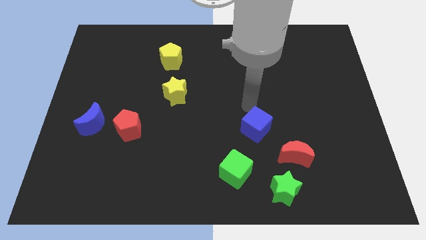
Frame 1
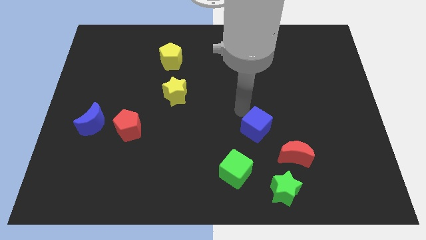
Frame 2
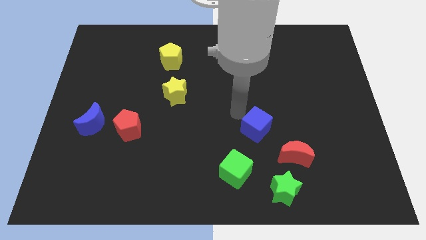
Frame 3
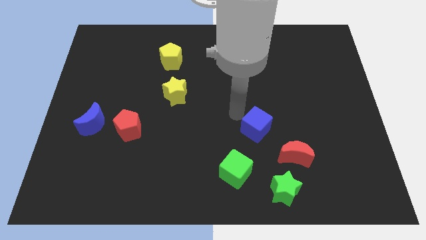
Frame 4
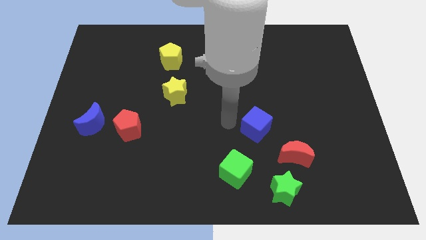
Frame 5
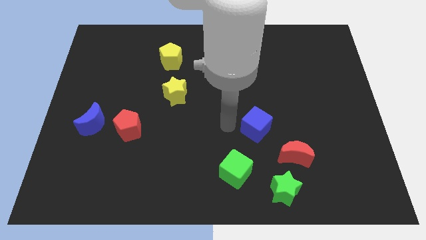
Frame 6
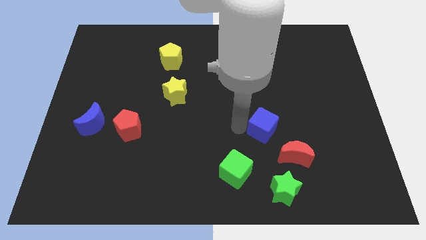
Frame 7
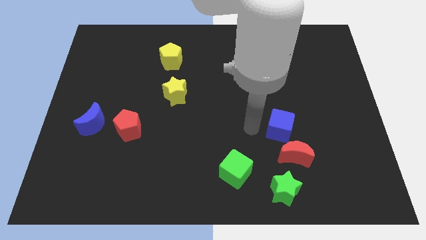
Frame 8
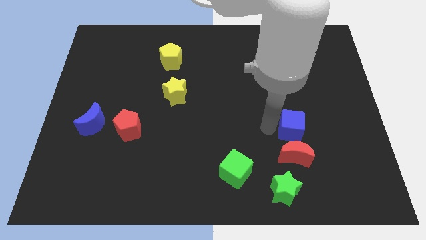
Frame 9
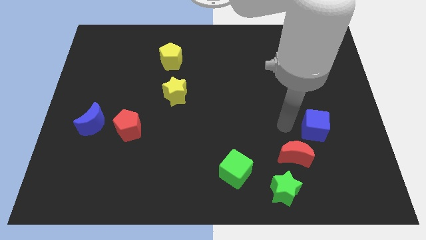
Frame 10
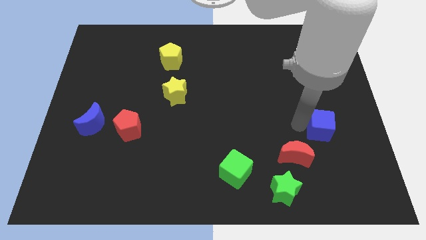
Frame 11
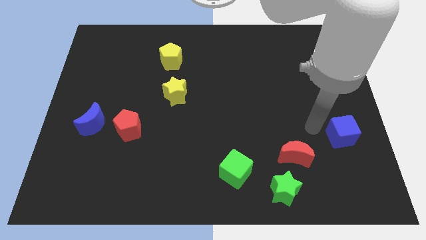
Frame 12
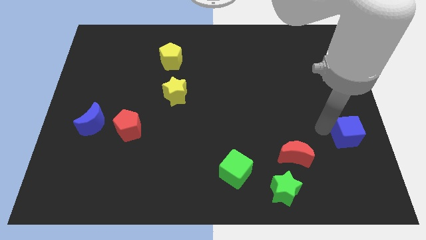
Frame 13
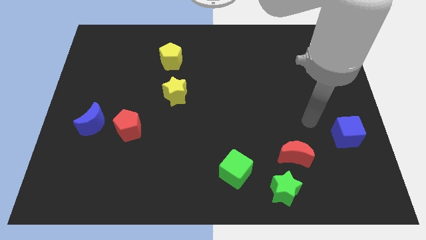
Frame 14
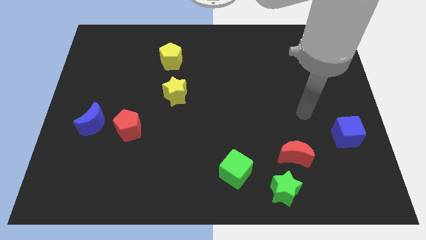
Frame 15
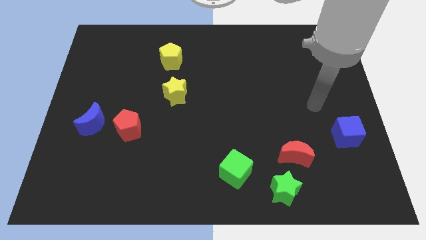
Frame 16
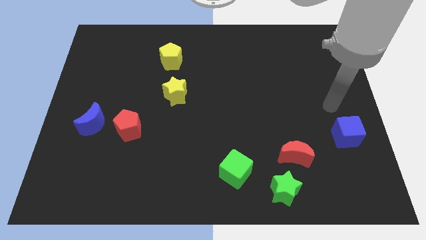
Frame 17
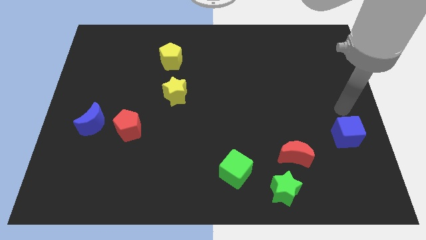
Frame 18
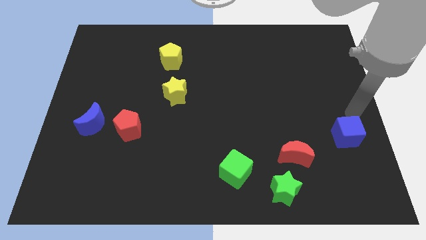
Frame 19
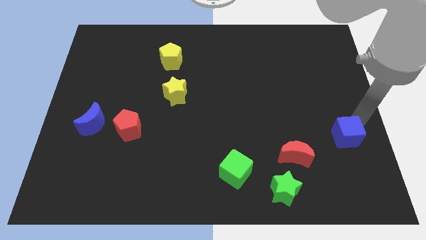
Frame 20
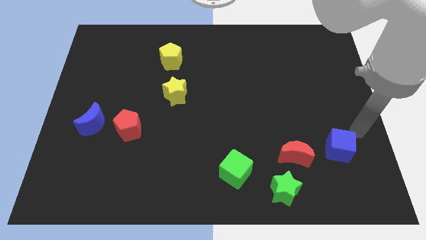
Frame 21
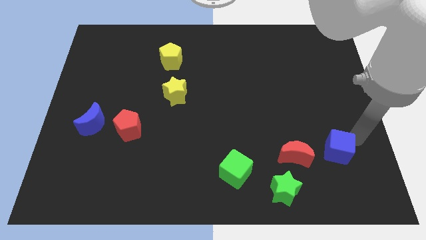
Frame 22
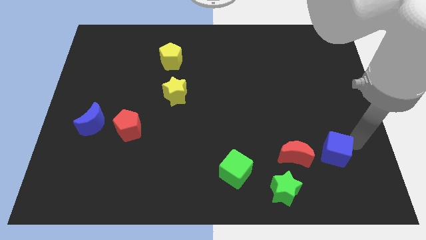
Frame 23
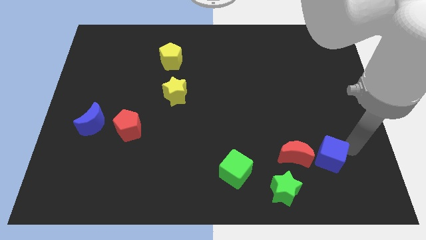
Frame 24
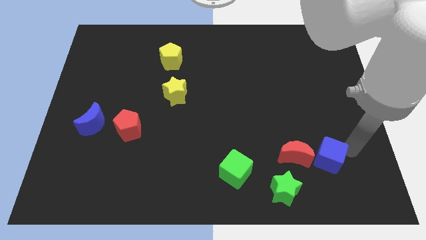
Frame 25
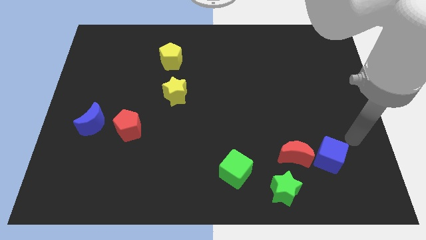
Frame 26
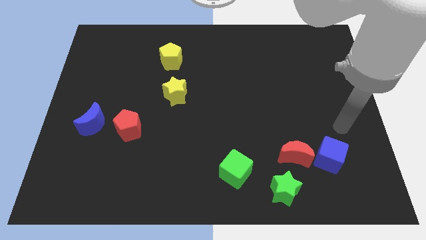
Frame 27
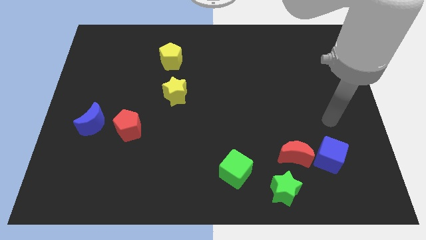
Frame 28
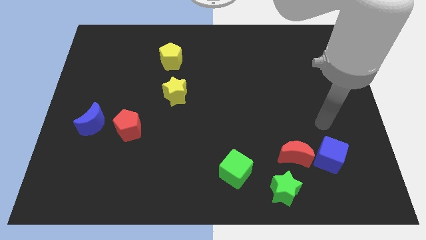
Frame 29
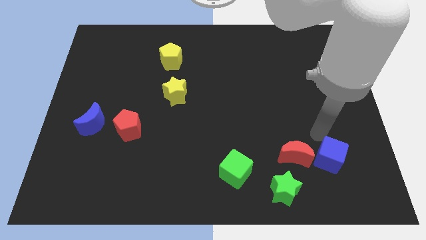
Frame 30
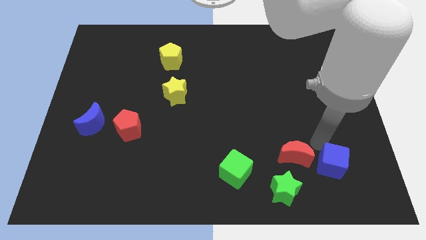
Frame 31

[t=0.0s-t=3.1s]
place blue cube to the right of red moon

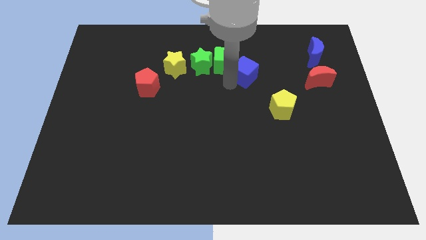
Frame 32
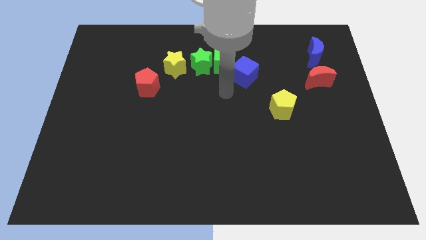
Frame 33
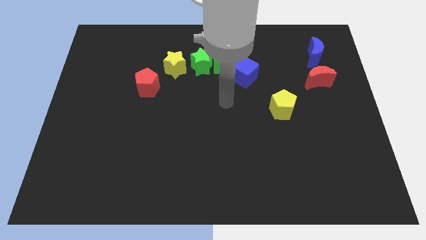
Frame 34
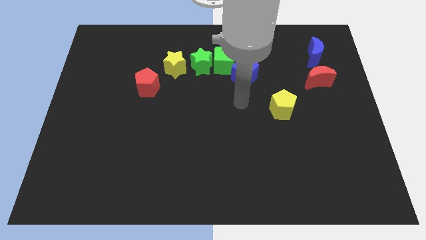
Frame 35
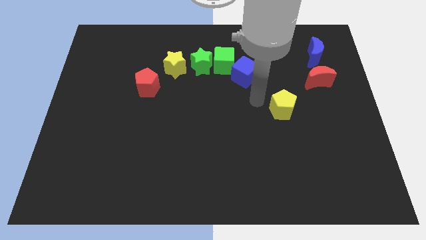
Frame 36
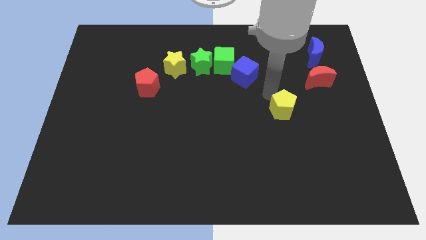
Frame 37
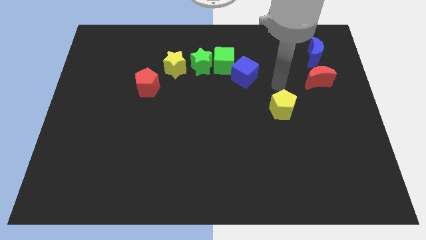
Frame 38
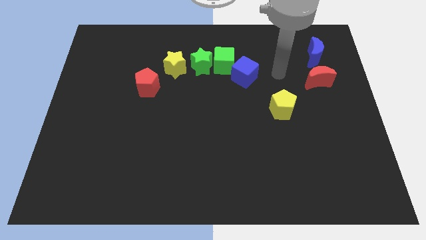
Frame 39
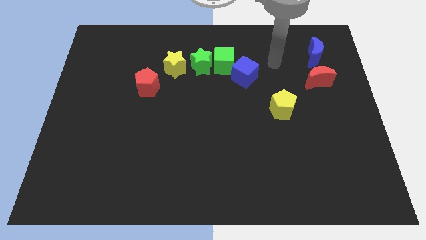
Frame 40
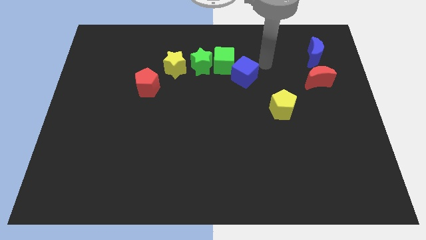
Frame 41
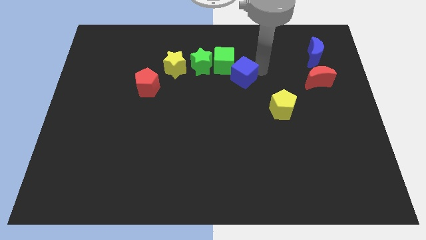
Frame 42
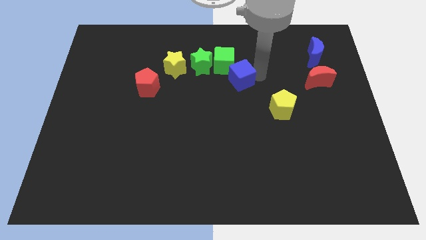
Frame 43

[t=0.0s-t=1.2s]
place the arm right to the blue cube

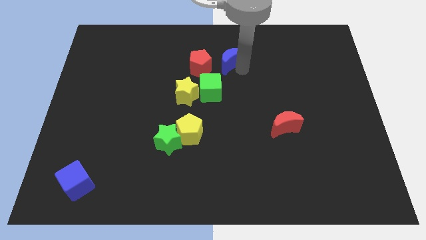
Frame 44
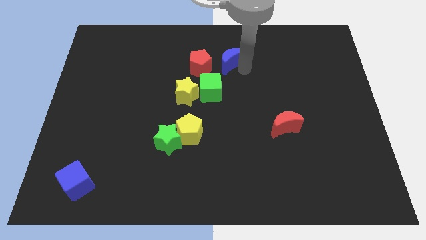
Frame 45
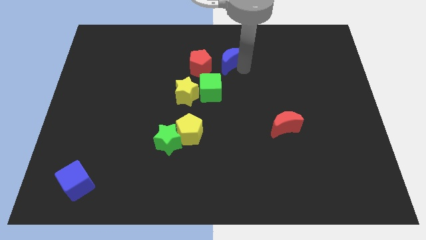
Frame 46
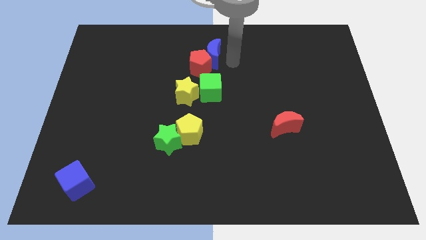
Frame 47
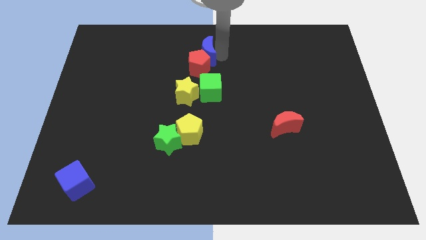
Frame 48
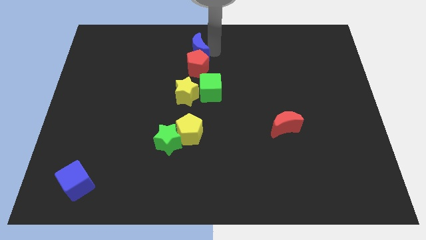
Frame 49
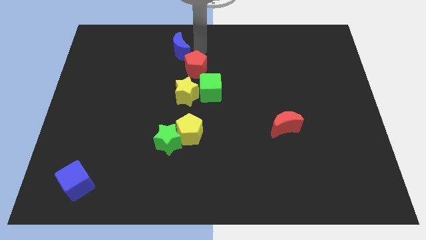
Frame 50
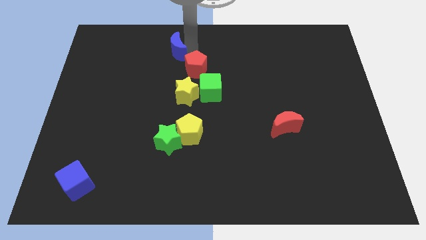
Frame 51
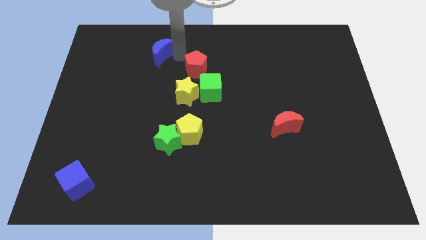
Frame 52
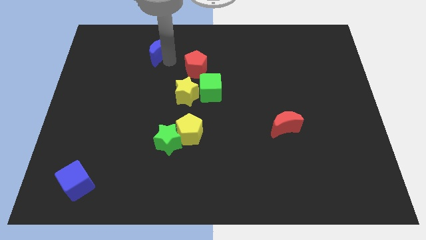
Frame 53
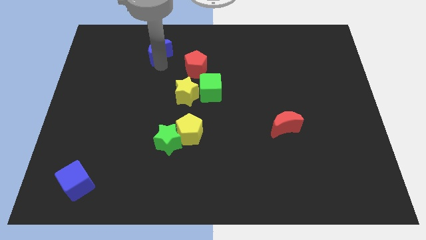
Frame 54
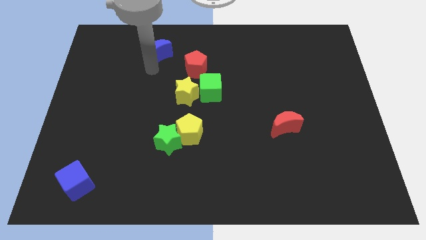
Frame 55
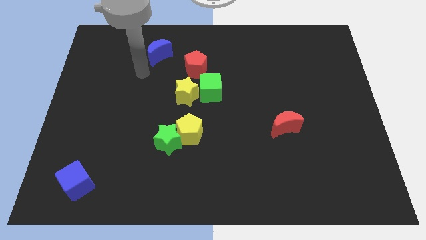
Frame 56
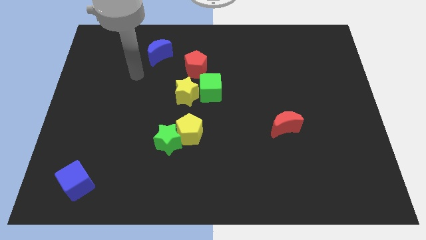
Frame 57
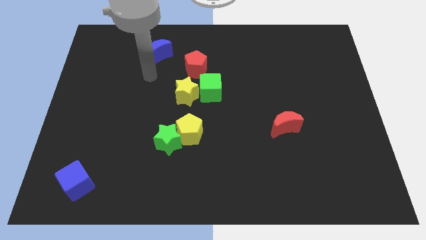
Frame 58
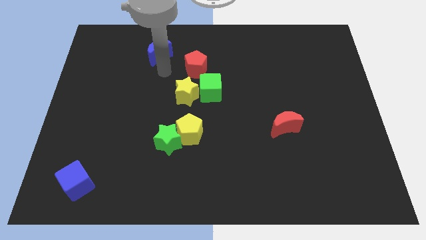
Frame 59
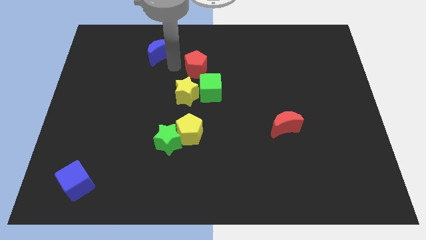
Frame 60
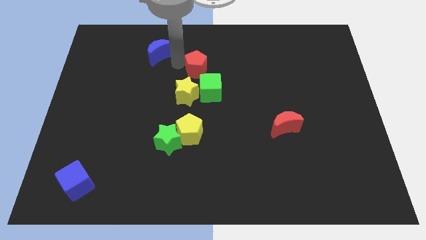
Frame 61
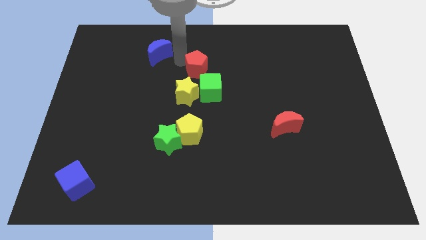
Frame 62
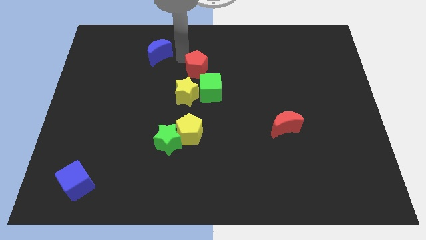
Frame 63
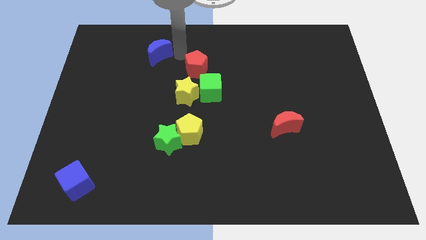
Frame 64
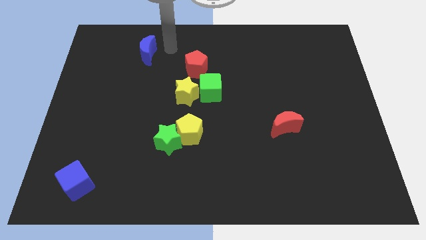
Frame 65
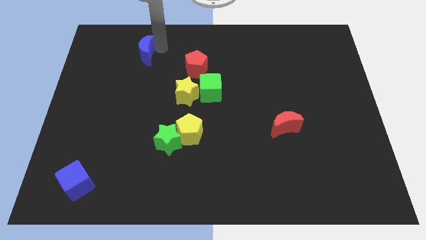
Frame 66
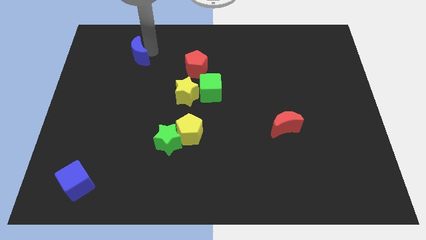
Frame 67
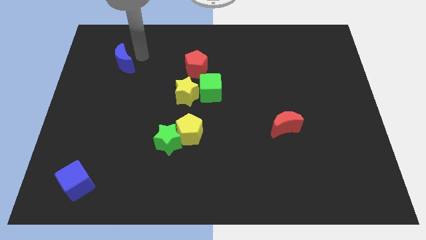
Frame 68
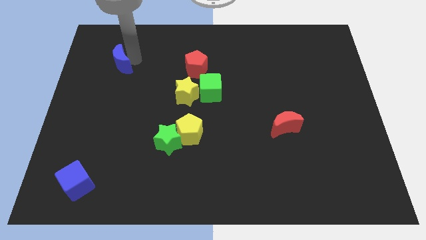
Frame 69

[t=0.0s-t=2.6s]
move the blue crescent to the left of the red pentagon

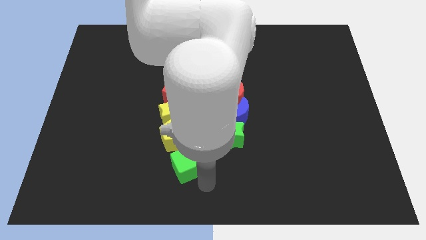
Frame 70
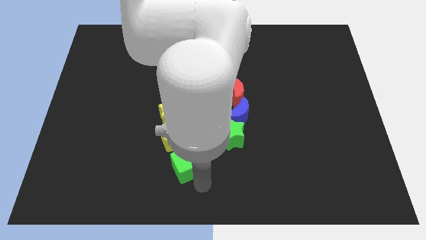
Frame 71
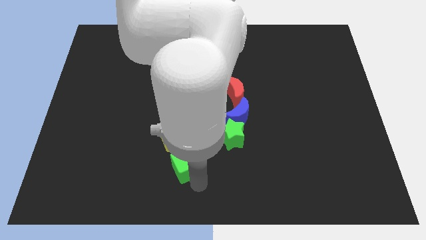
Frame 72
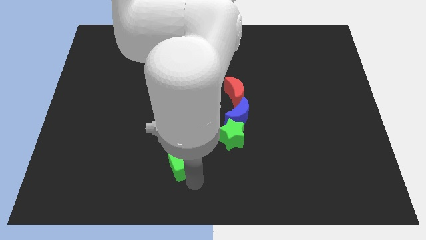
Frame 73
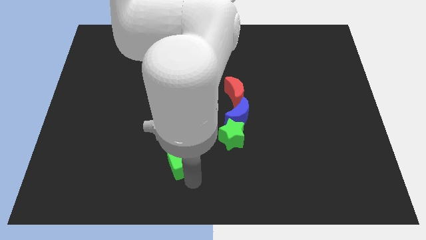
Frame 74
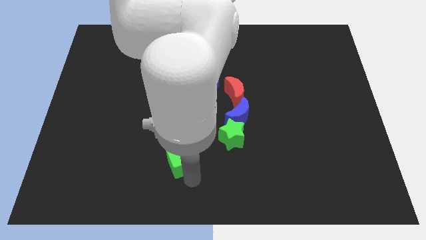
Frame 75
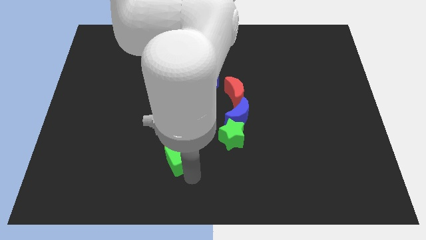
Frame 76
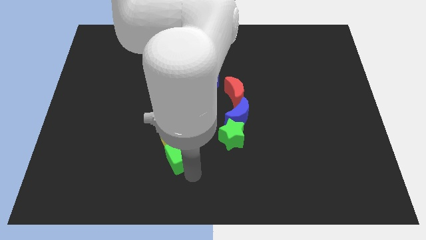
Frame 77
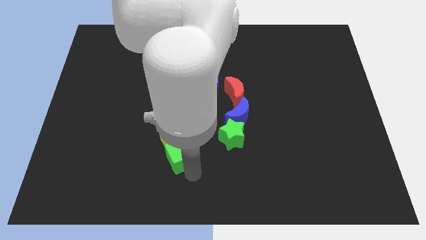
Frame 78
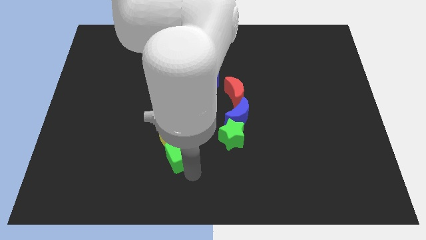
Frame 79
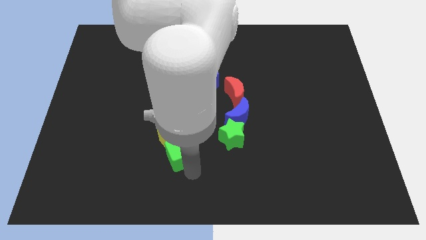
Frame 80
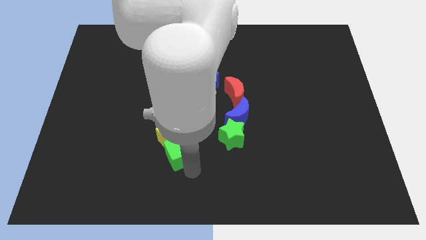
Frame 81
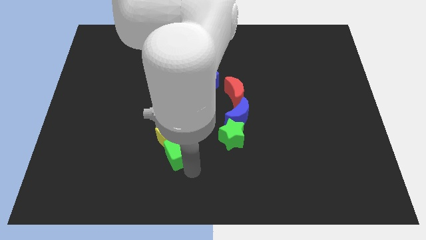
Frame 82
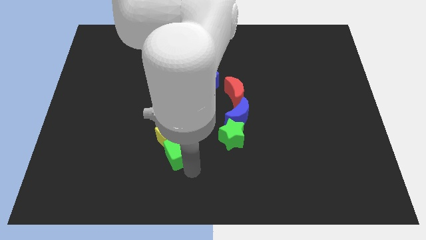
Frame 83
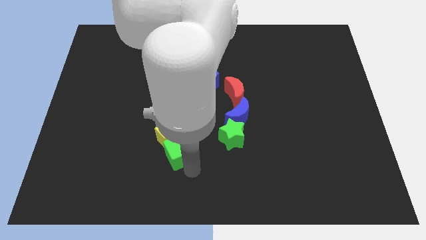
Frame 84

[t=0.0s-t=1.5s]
move green cube into yellow pentagon

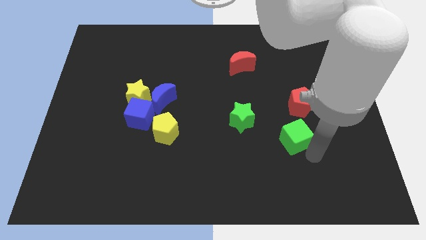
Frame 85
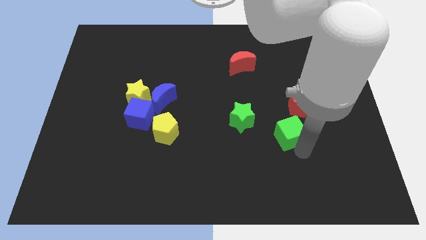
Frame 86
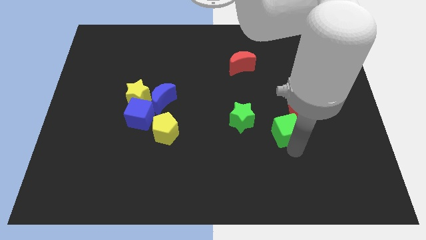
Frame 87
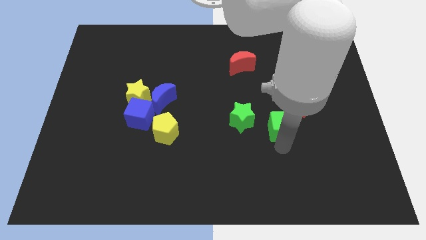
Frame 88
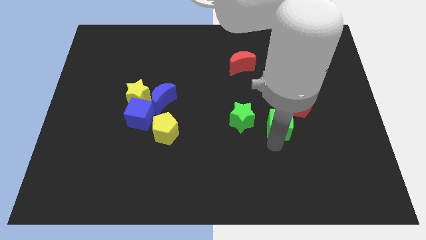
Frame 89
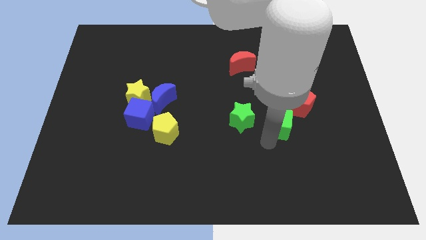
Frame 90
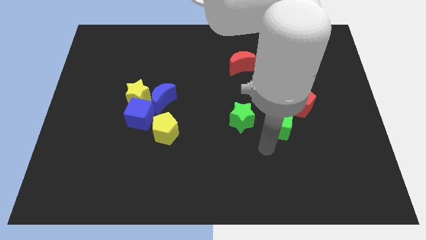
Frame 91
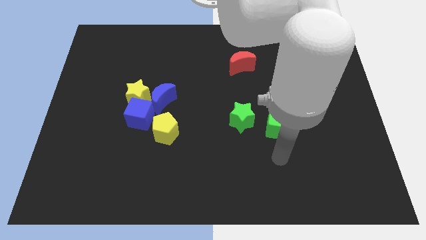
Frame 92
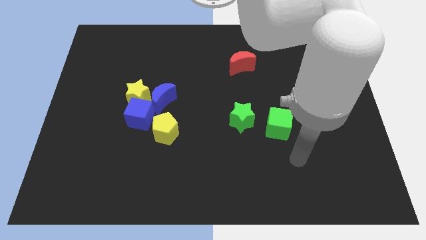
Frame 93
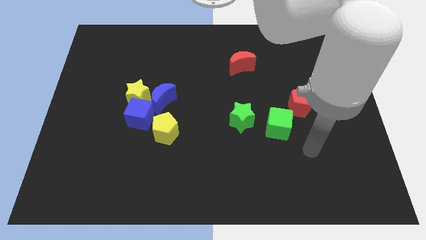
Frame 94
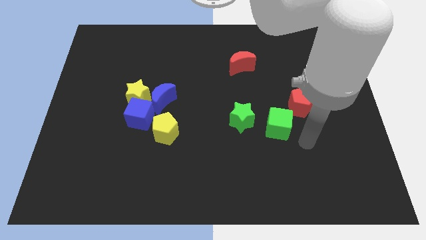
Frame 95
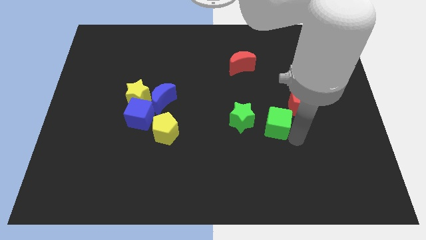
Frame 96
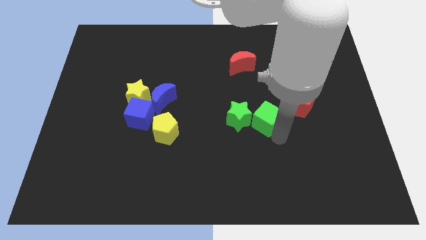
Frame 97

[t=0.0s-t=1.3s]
move green cube to the bottom left of red pentagon
